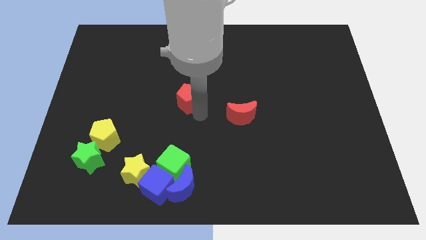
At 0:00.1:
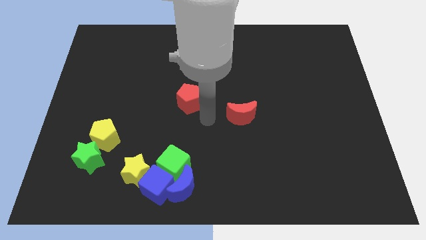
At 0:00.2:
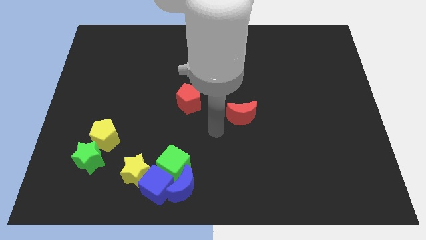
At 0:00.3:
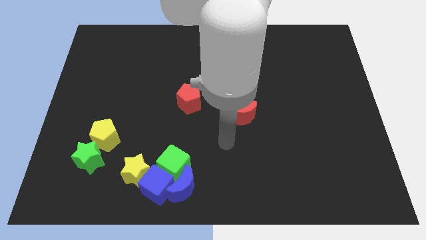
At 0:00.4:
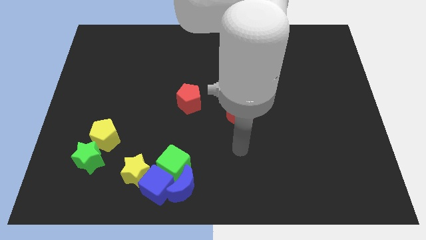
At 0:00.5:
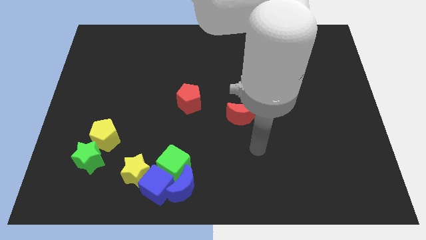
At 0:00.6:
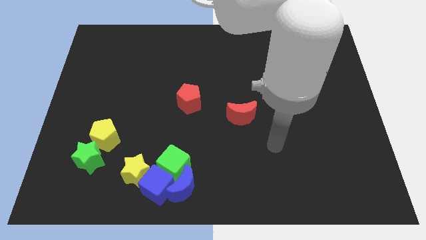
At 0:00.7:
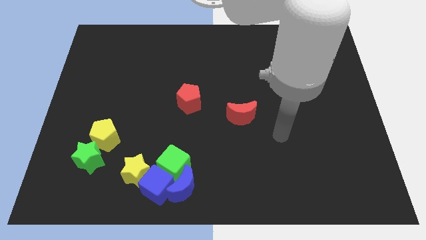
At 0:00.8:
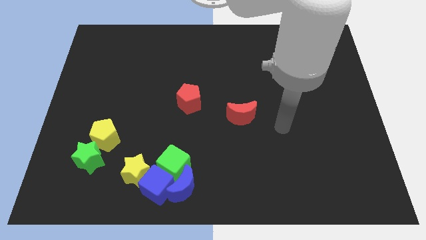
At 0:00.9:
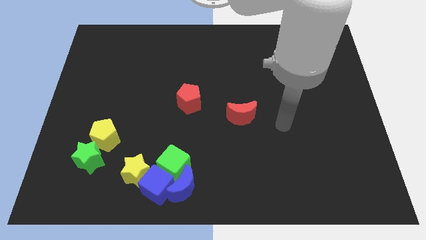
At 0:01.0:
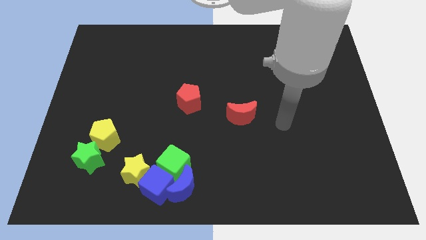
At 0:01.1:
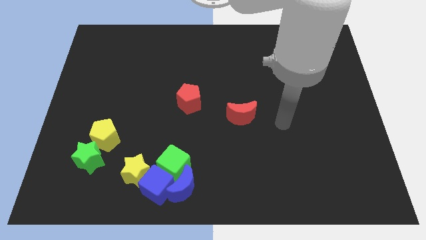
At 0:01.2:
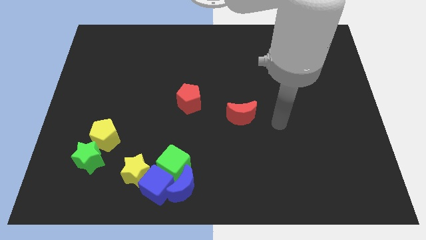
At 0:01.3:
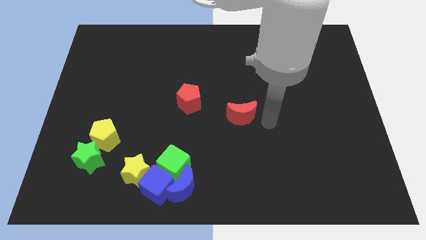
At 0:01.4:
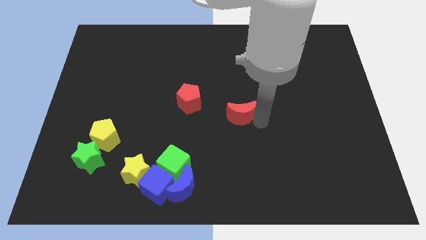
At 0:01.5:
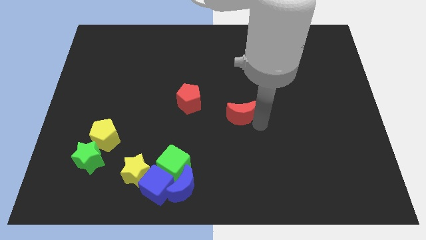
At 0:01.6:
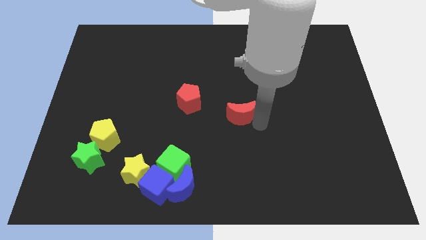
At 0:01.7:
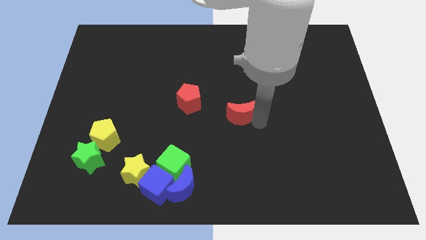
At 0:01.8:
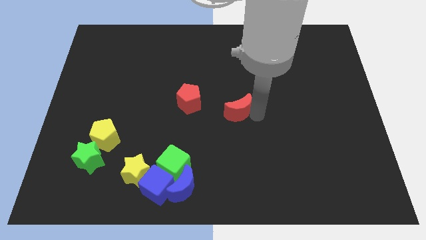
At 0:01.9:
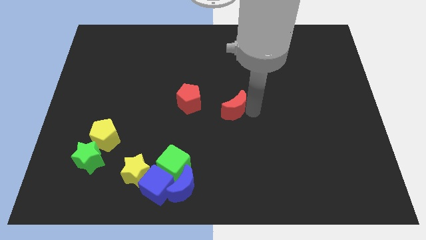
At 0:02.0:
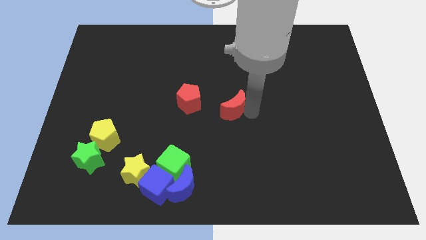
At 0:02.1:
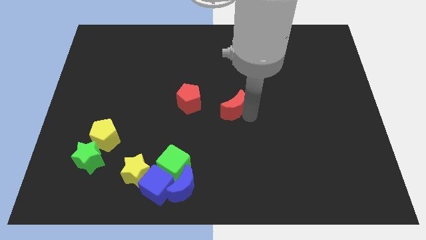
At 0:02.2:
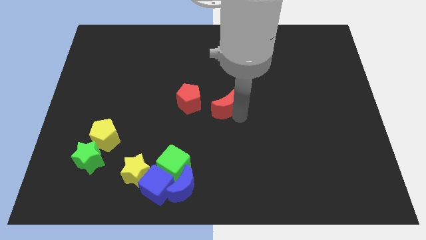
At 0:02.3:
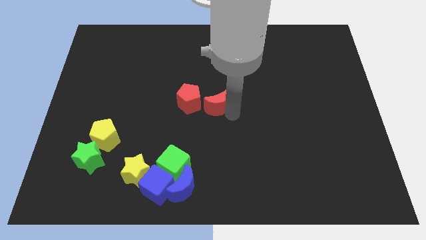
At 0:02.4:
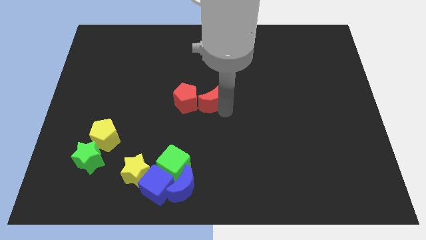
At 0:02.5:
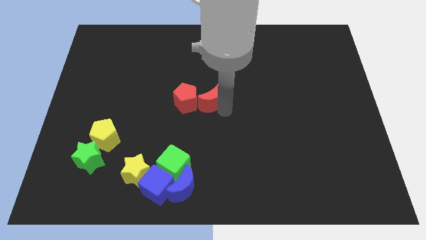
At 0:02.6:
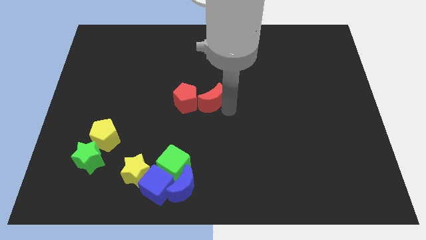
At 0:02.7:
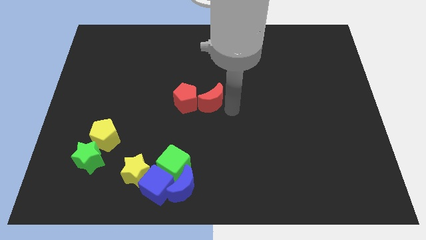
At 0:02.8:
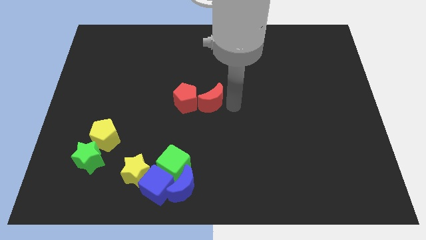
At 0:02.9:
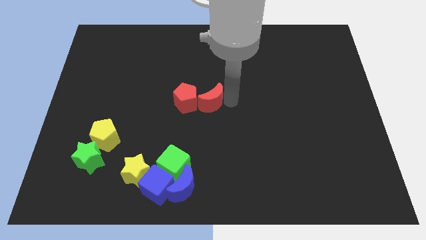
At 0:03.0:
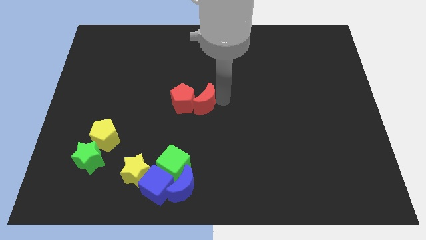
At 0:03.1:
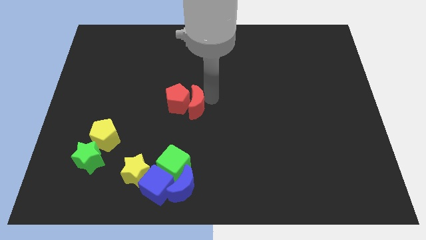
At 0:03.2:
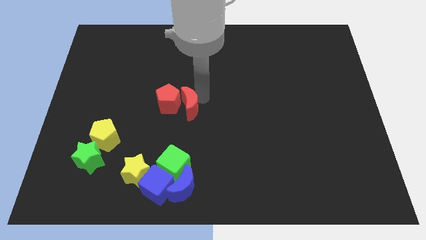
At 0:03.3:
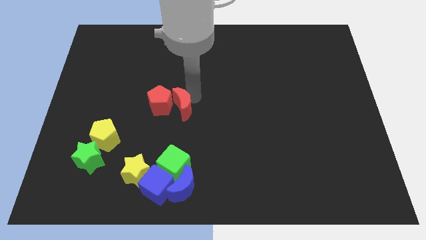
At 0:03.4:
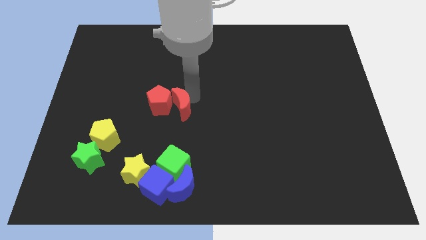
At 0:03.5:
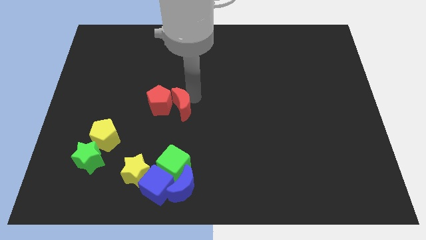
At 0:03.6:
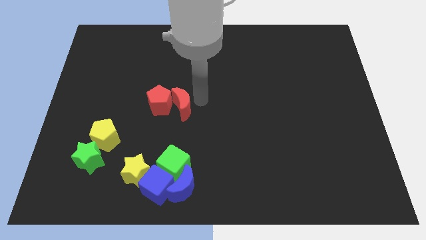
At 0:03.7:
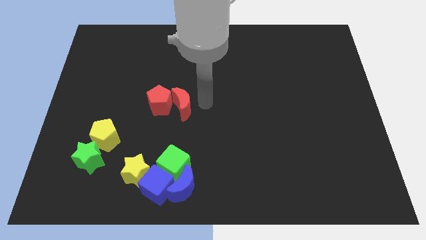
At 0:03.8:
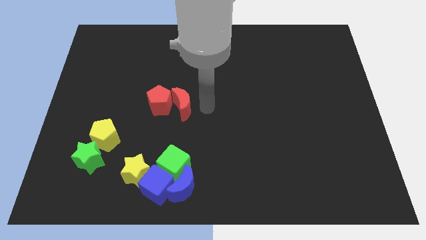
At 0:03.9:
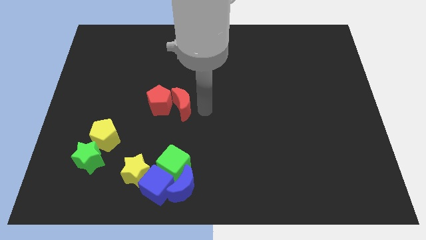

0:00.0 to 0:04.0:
push the red moon into red pentagon

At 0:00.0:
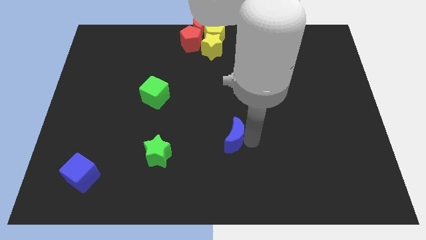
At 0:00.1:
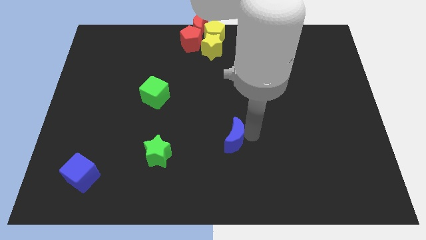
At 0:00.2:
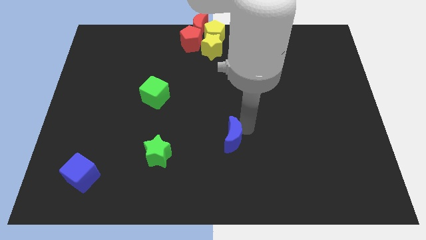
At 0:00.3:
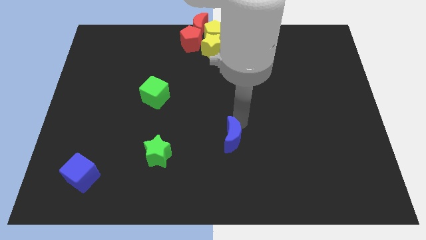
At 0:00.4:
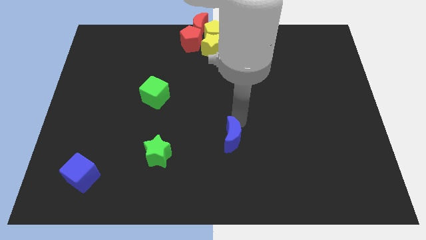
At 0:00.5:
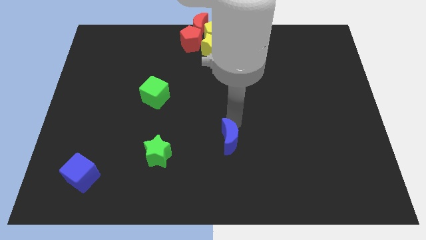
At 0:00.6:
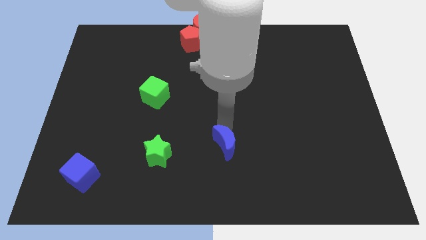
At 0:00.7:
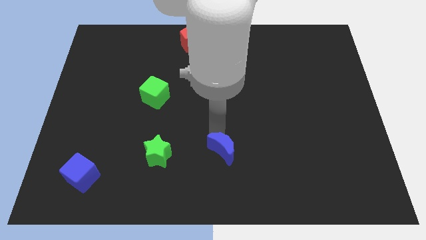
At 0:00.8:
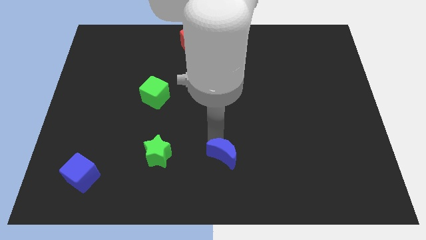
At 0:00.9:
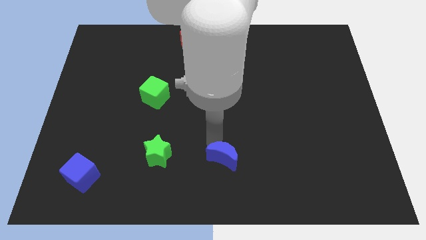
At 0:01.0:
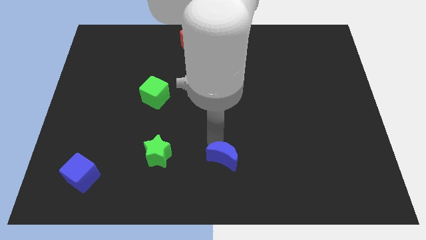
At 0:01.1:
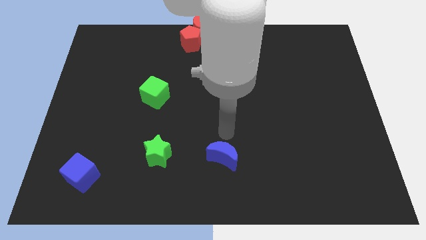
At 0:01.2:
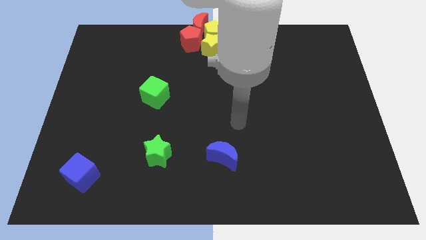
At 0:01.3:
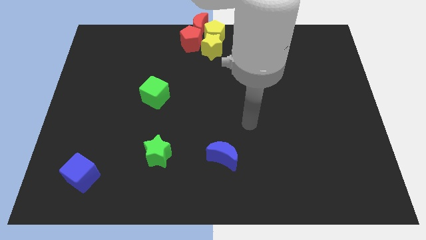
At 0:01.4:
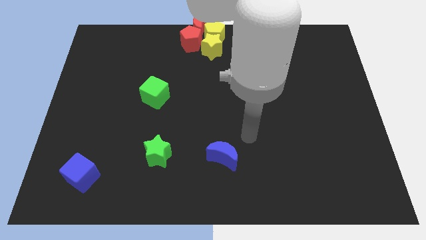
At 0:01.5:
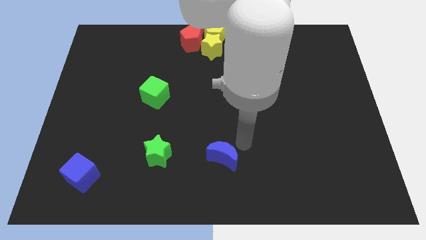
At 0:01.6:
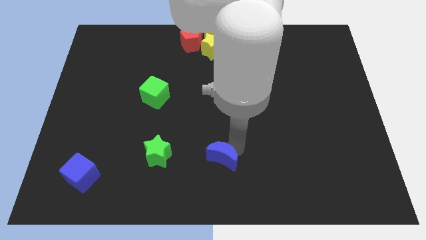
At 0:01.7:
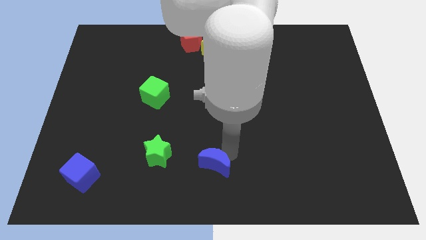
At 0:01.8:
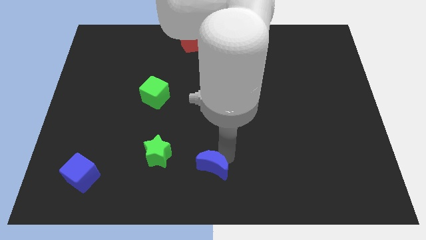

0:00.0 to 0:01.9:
drag blue crescent right to green star

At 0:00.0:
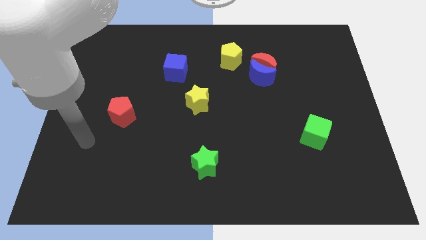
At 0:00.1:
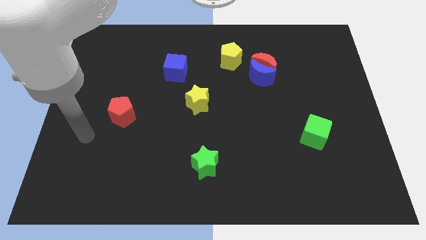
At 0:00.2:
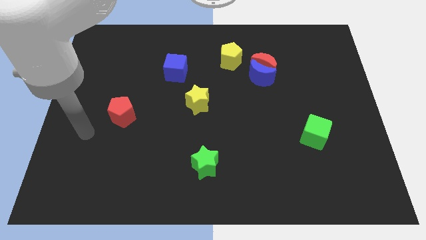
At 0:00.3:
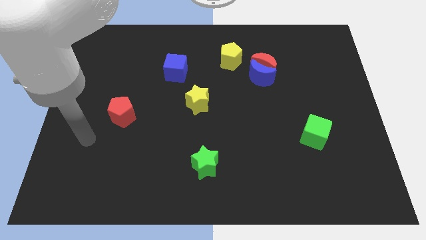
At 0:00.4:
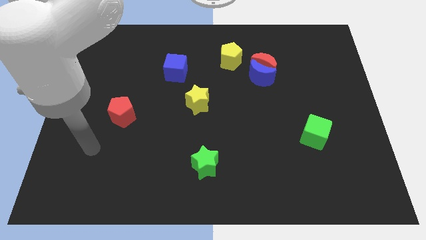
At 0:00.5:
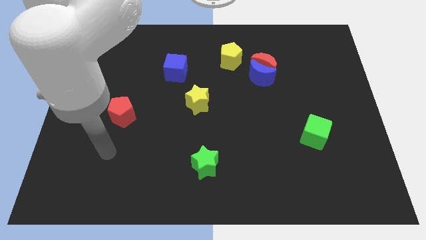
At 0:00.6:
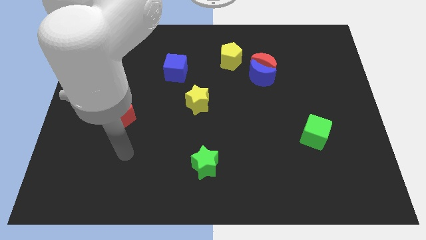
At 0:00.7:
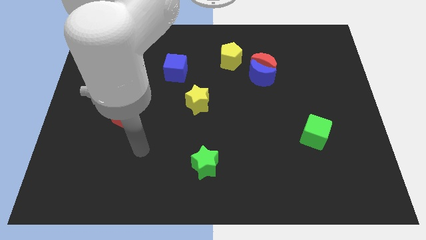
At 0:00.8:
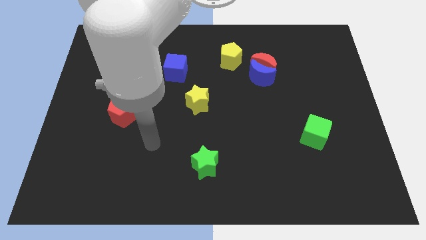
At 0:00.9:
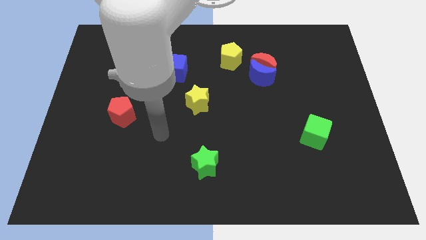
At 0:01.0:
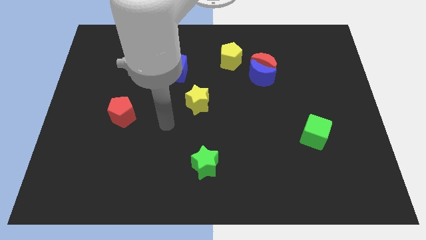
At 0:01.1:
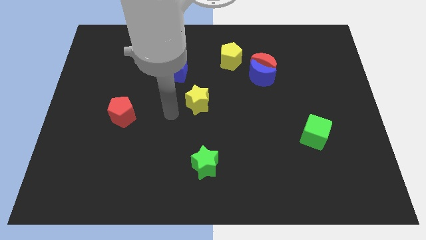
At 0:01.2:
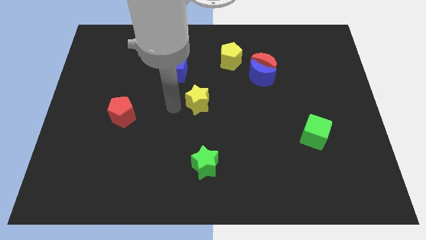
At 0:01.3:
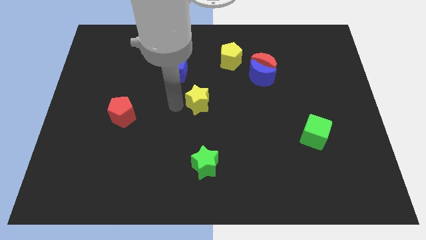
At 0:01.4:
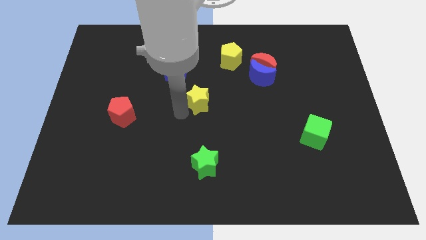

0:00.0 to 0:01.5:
place your hand at the left side of the yellow star

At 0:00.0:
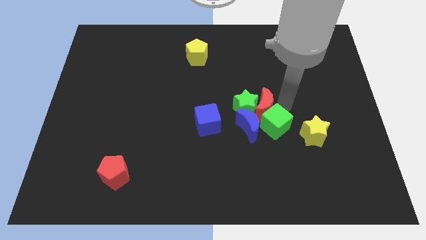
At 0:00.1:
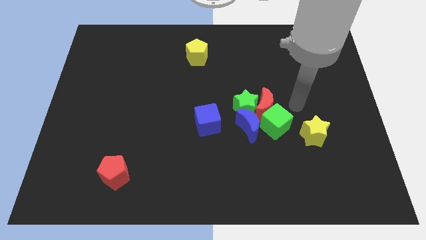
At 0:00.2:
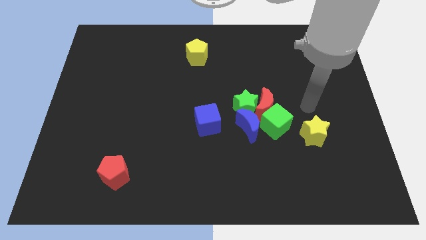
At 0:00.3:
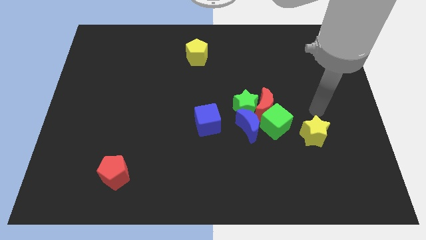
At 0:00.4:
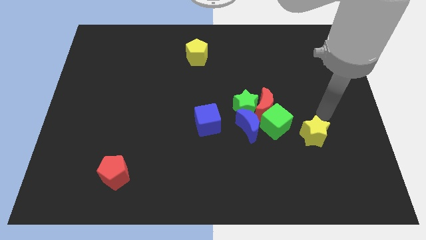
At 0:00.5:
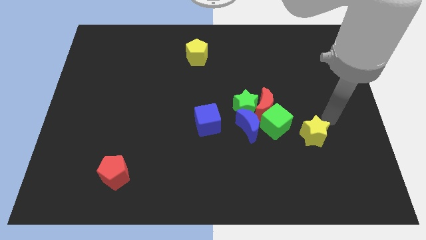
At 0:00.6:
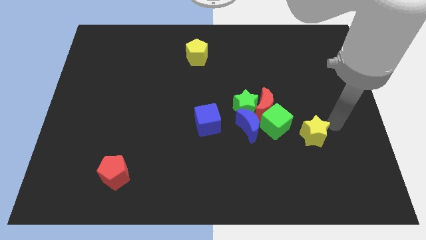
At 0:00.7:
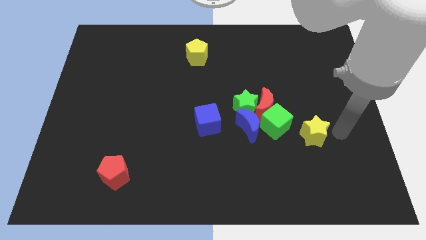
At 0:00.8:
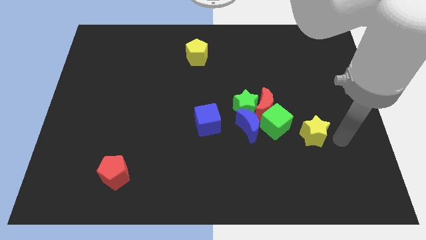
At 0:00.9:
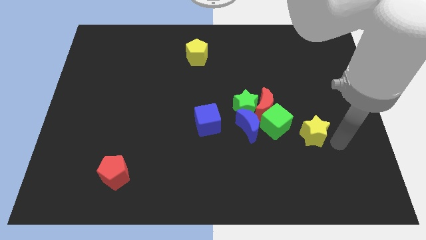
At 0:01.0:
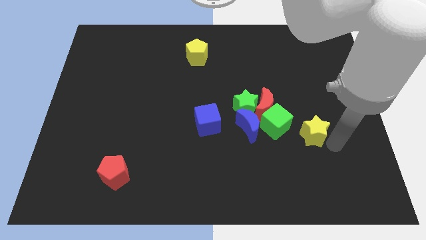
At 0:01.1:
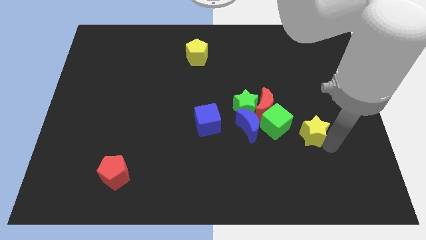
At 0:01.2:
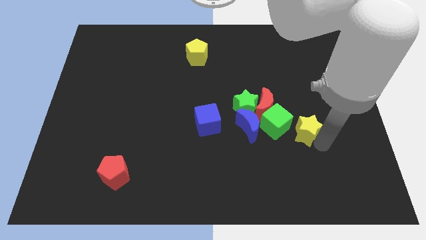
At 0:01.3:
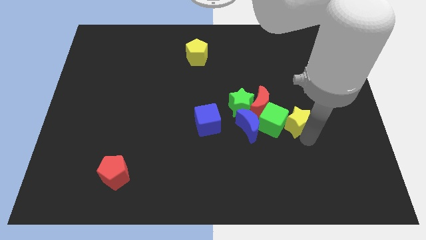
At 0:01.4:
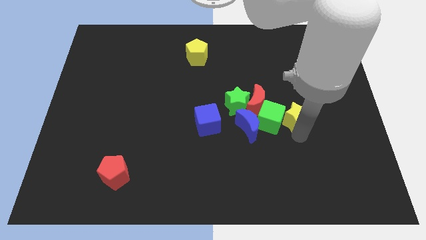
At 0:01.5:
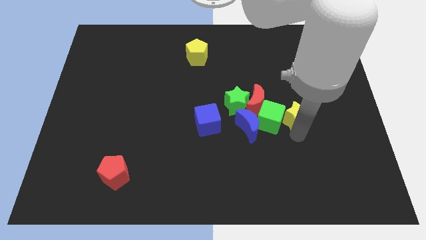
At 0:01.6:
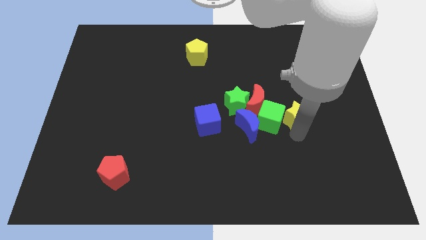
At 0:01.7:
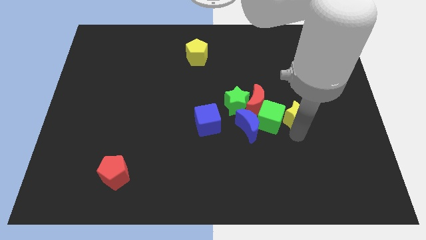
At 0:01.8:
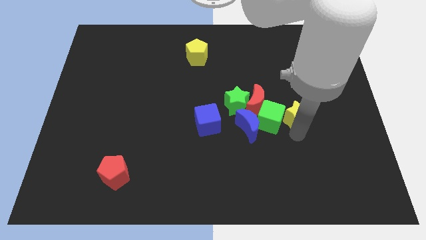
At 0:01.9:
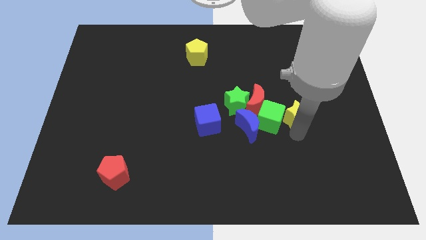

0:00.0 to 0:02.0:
put the yellow star into the green cube
